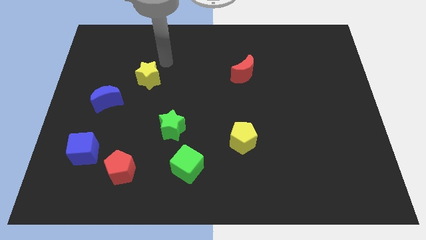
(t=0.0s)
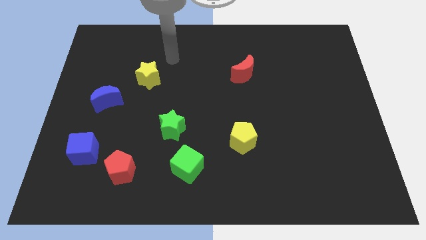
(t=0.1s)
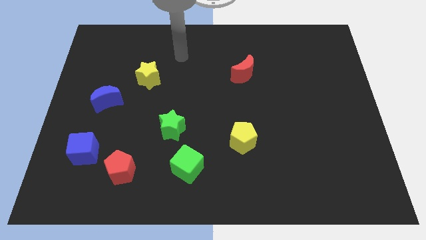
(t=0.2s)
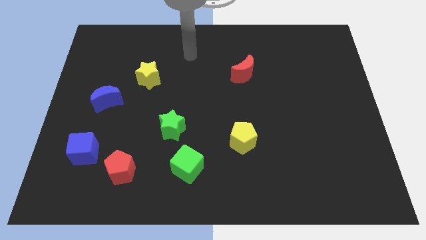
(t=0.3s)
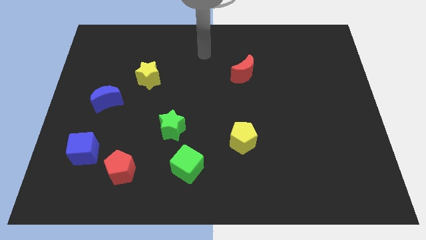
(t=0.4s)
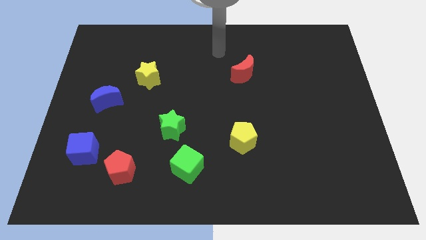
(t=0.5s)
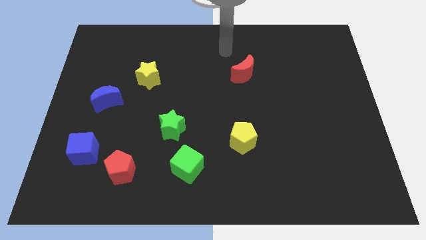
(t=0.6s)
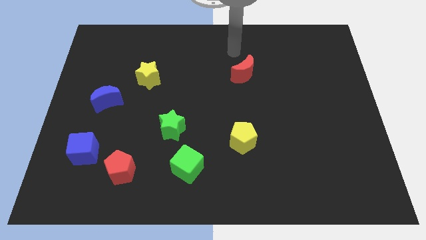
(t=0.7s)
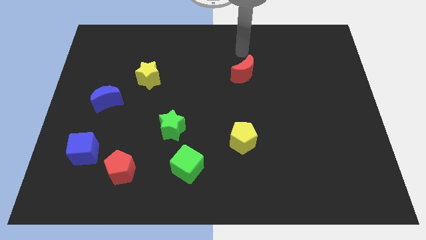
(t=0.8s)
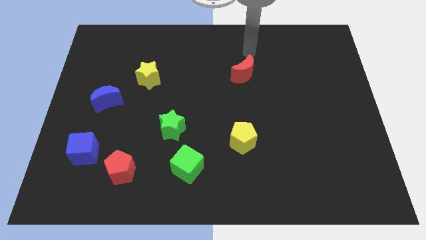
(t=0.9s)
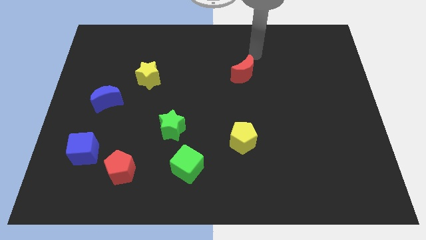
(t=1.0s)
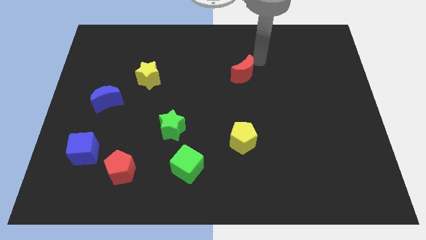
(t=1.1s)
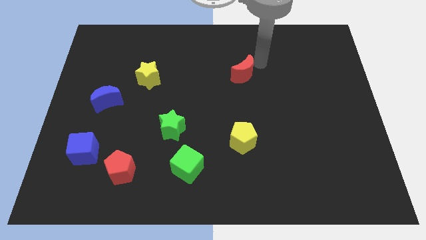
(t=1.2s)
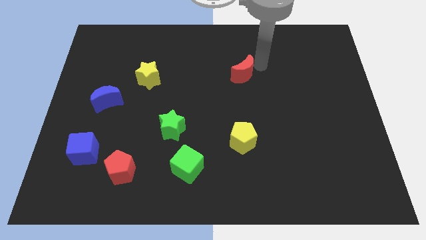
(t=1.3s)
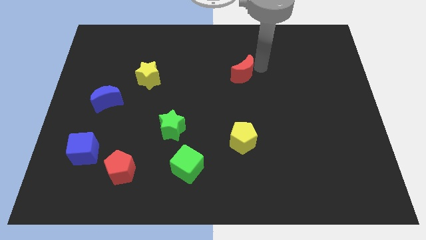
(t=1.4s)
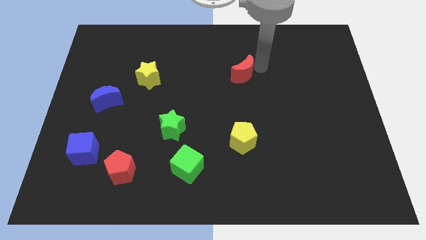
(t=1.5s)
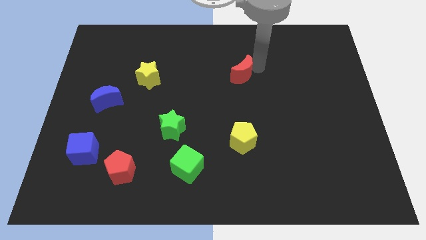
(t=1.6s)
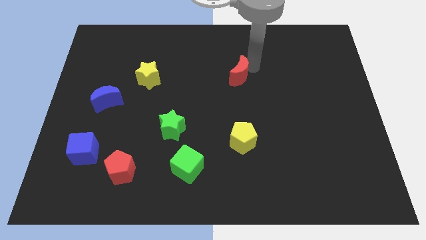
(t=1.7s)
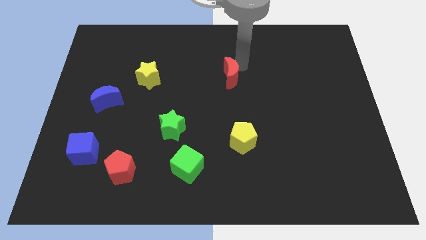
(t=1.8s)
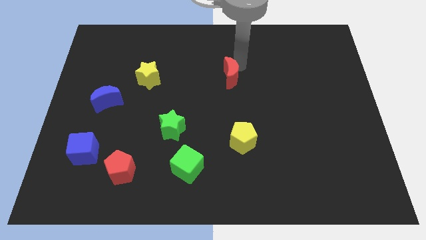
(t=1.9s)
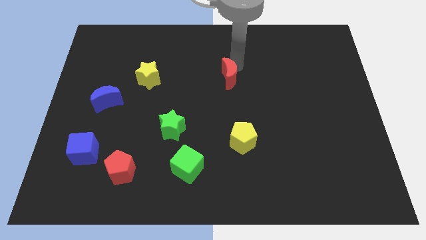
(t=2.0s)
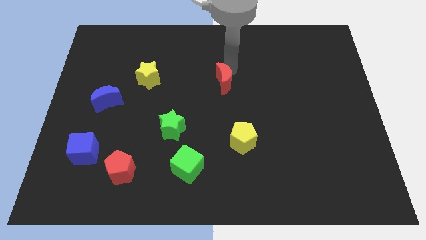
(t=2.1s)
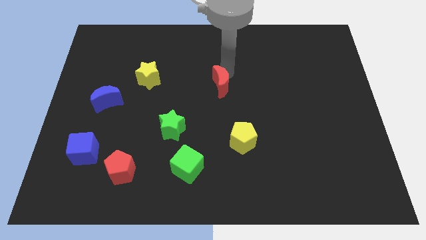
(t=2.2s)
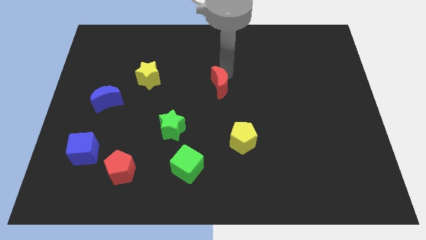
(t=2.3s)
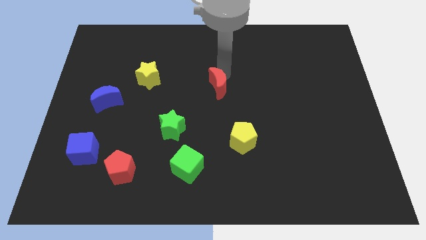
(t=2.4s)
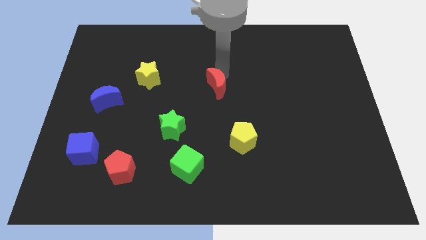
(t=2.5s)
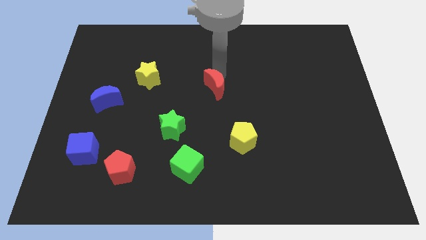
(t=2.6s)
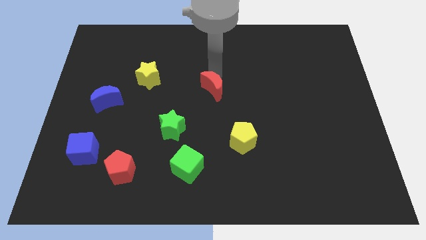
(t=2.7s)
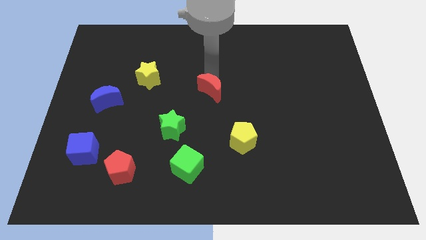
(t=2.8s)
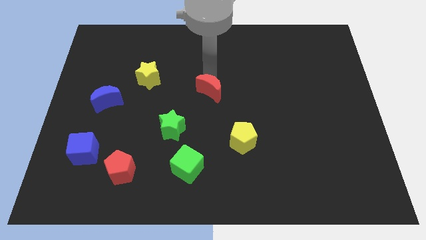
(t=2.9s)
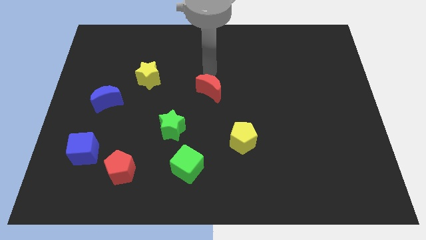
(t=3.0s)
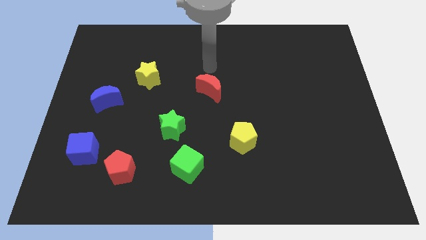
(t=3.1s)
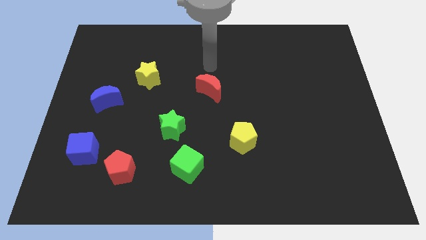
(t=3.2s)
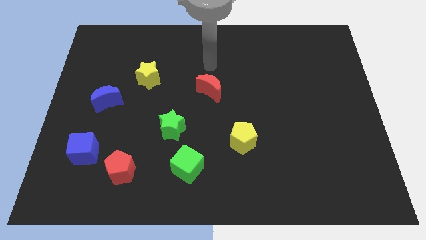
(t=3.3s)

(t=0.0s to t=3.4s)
push the red crescent to the center of the board

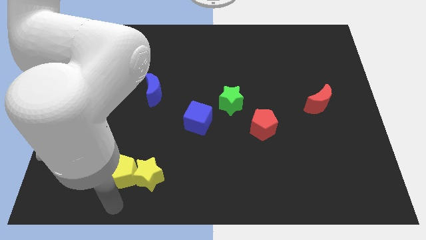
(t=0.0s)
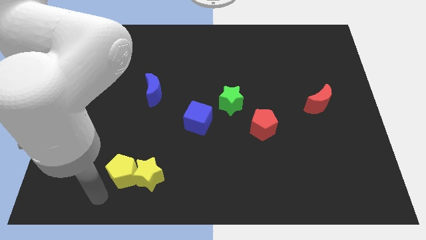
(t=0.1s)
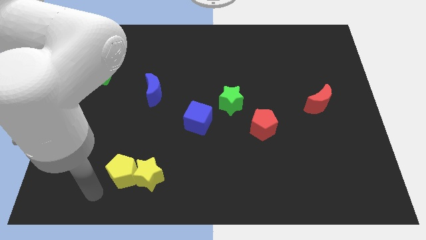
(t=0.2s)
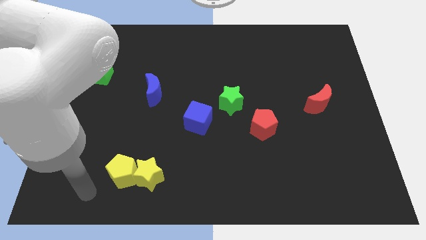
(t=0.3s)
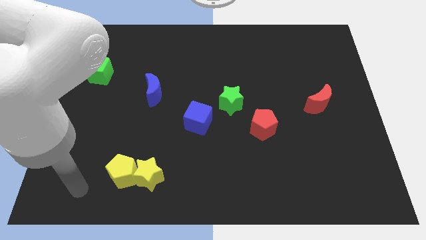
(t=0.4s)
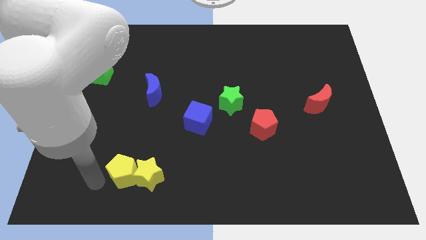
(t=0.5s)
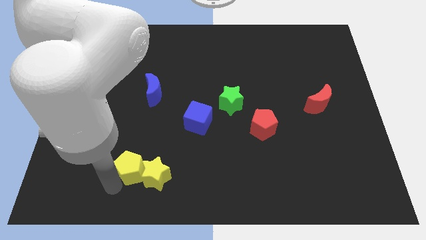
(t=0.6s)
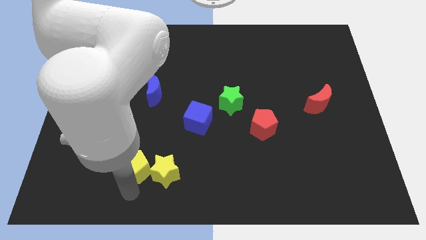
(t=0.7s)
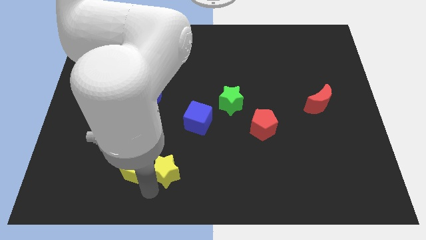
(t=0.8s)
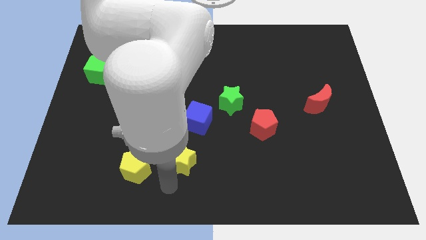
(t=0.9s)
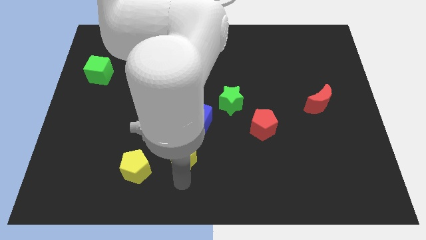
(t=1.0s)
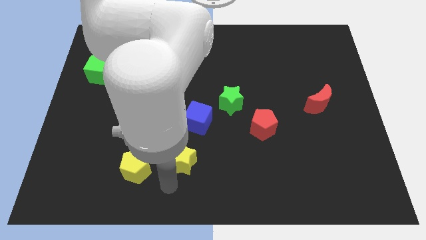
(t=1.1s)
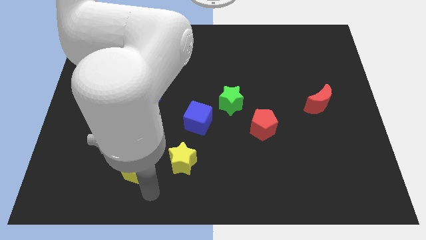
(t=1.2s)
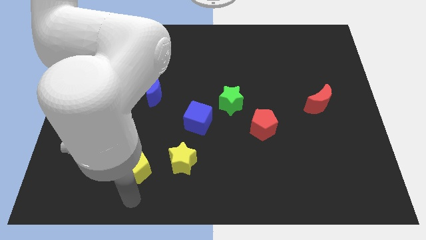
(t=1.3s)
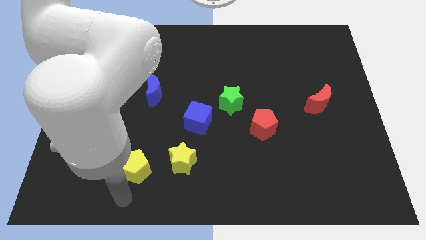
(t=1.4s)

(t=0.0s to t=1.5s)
separate the yellow star from the yellow pentagon

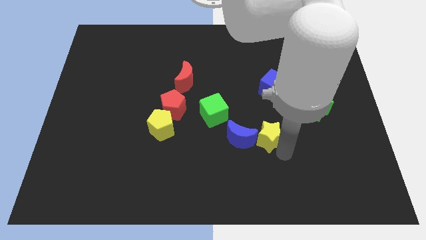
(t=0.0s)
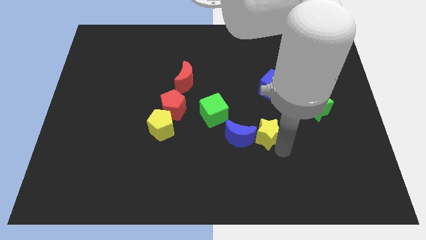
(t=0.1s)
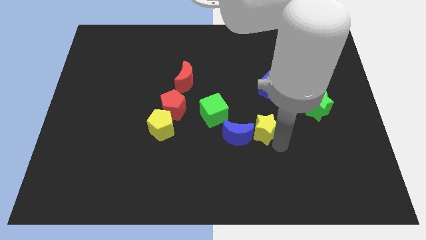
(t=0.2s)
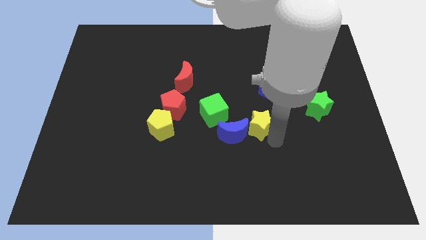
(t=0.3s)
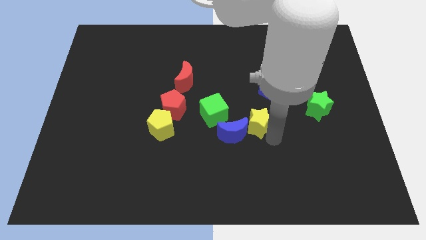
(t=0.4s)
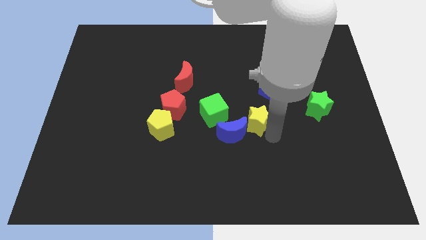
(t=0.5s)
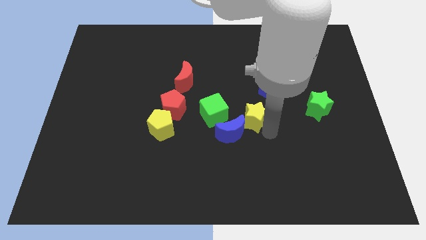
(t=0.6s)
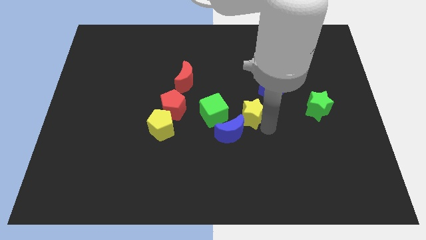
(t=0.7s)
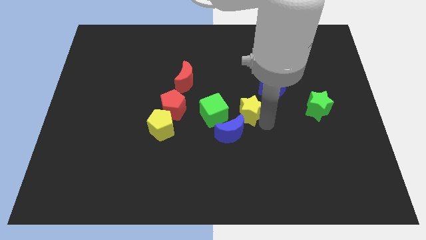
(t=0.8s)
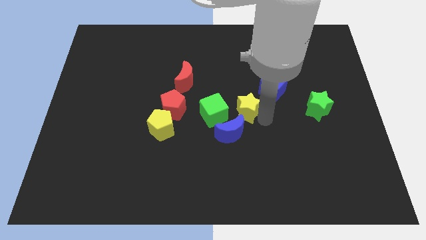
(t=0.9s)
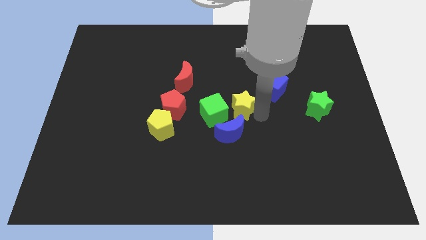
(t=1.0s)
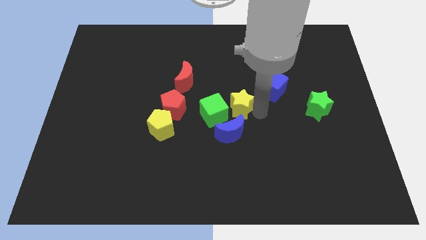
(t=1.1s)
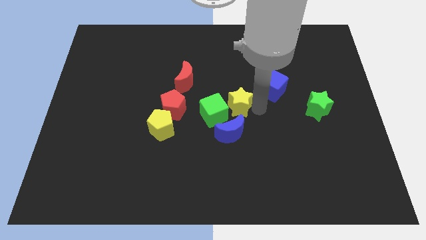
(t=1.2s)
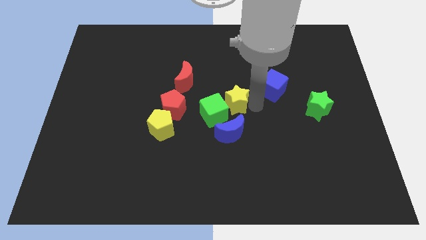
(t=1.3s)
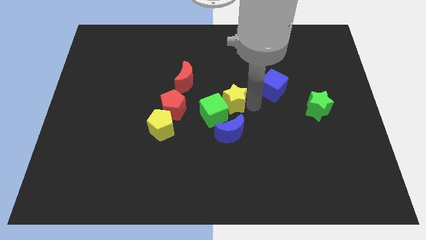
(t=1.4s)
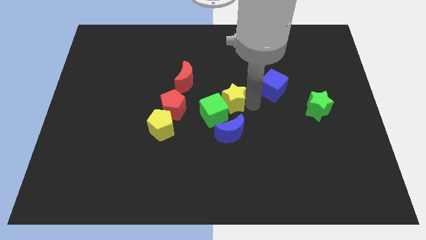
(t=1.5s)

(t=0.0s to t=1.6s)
push yellow star to the right of green cube

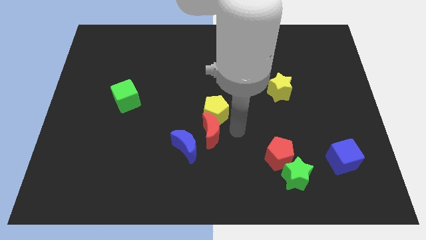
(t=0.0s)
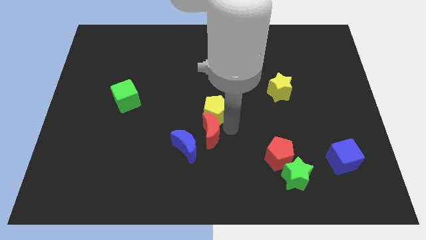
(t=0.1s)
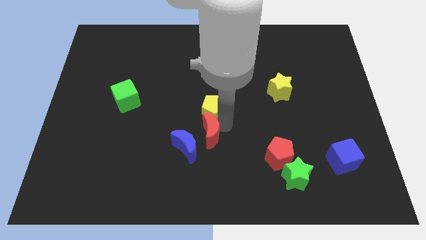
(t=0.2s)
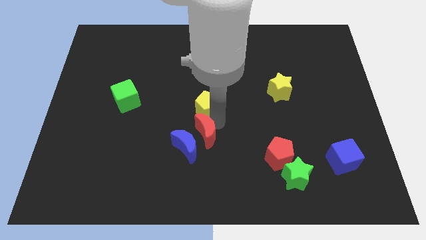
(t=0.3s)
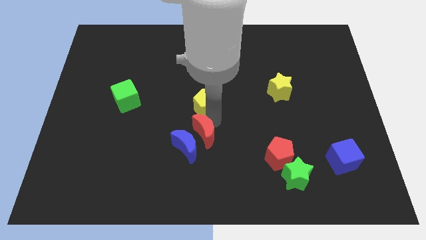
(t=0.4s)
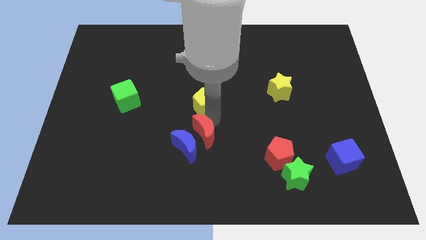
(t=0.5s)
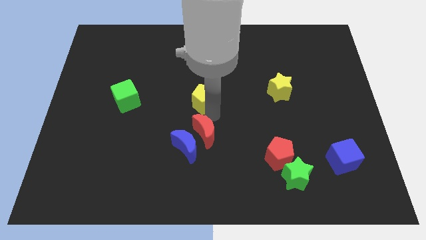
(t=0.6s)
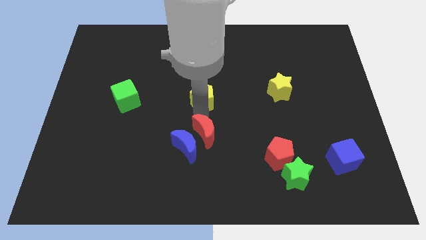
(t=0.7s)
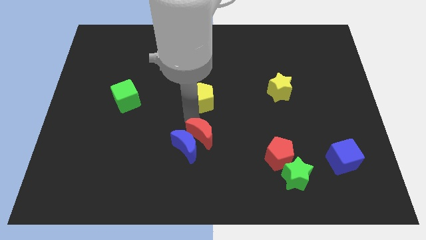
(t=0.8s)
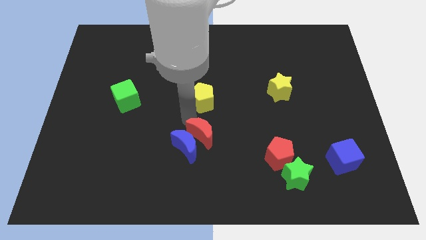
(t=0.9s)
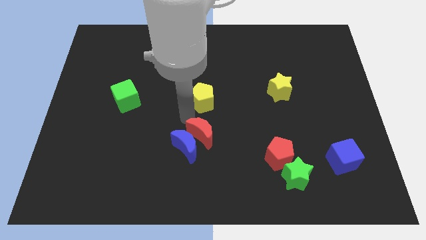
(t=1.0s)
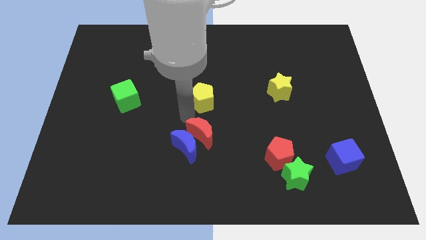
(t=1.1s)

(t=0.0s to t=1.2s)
seperate the yellow pentagon and red moon

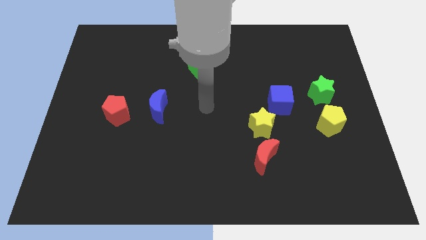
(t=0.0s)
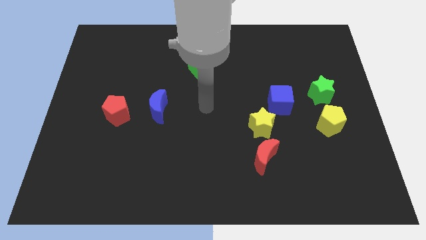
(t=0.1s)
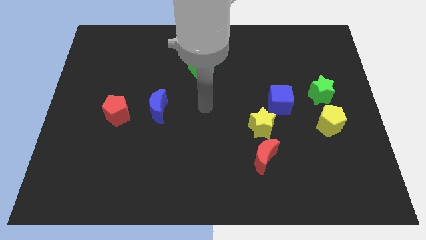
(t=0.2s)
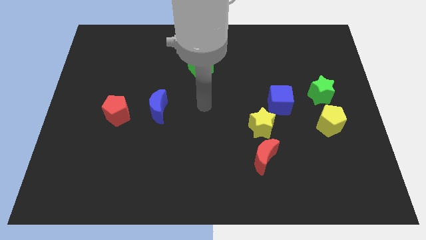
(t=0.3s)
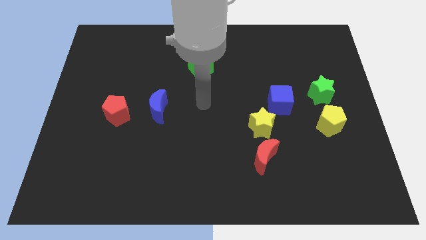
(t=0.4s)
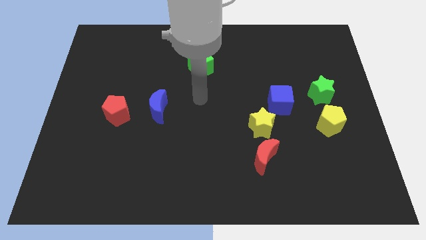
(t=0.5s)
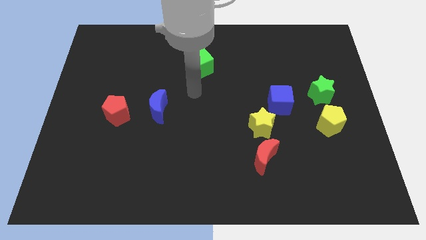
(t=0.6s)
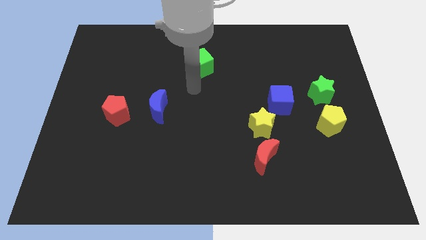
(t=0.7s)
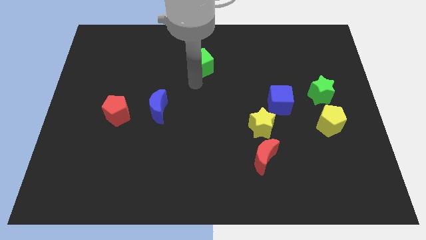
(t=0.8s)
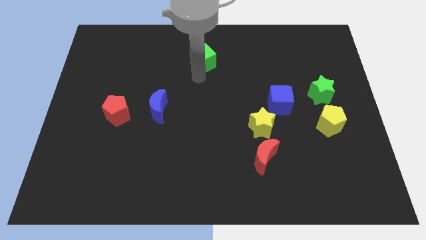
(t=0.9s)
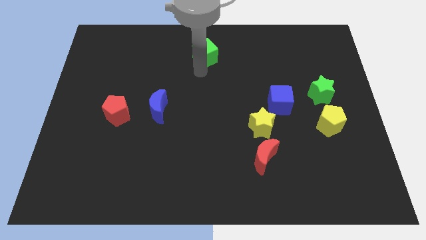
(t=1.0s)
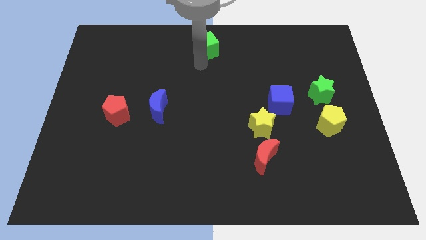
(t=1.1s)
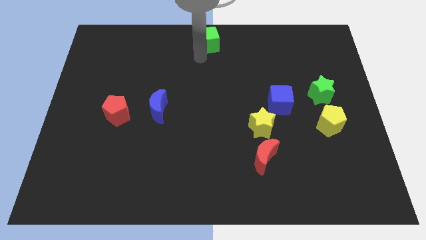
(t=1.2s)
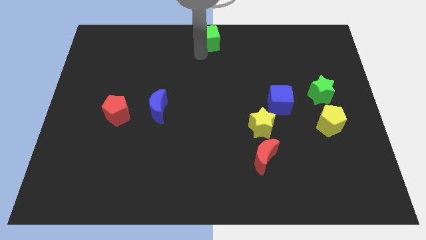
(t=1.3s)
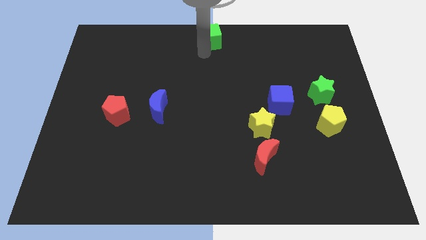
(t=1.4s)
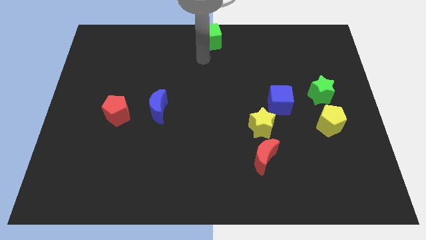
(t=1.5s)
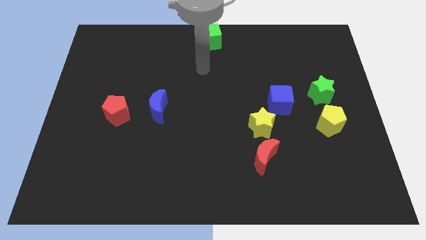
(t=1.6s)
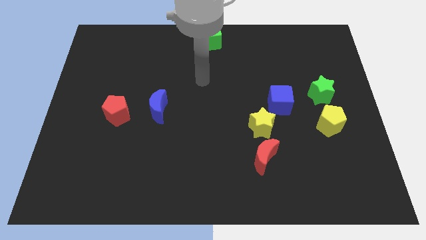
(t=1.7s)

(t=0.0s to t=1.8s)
move the green cube to the top center of the board
